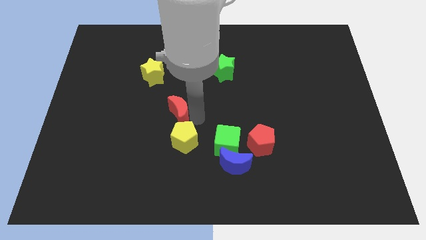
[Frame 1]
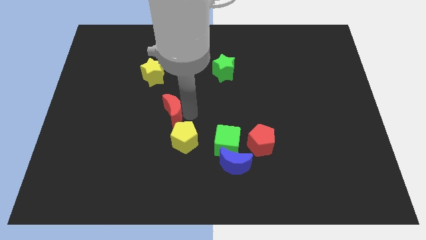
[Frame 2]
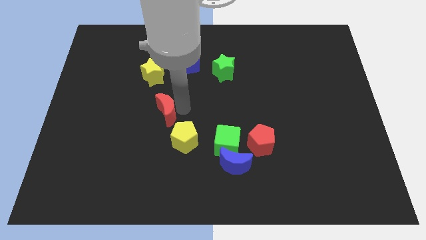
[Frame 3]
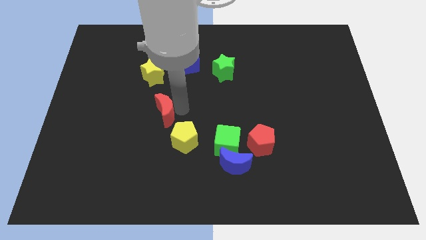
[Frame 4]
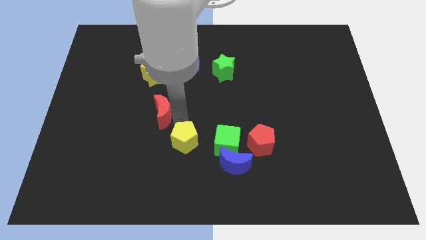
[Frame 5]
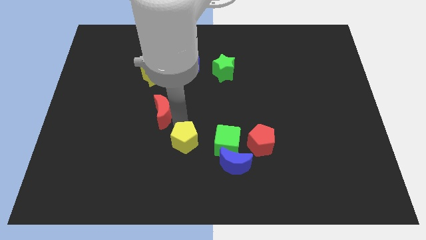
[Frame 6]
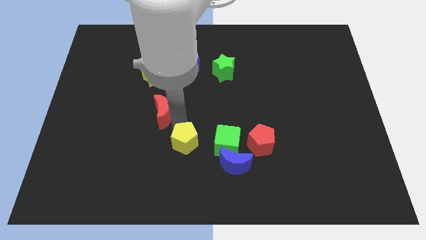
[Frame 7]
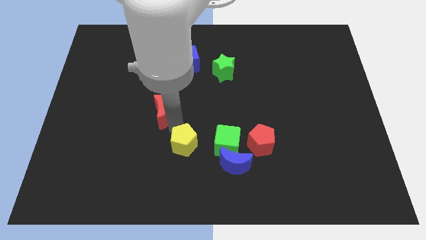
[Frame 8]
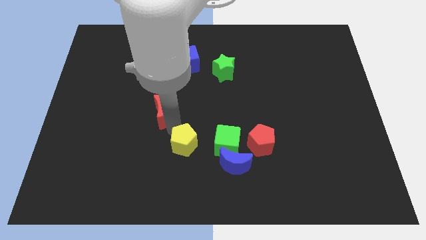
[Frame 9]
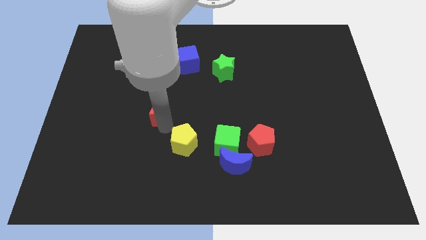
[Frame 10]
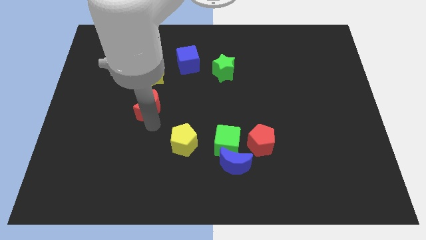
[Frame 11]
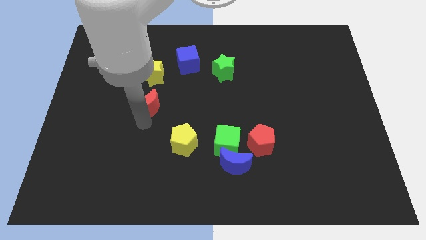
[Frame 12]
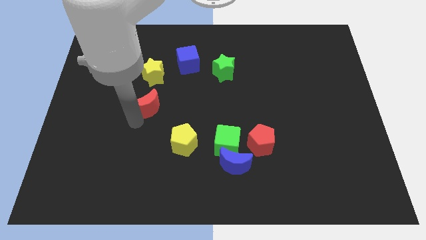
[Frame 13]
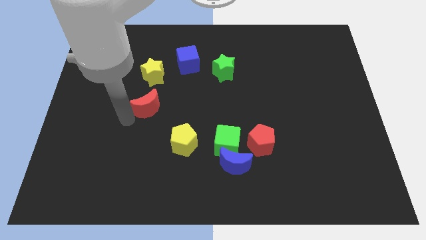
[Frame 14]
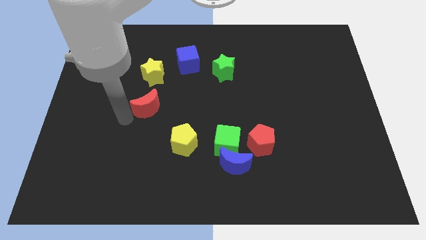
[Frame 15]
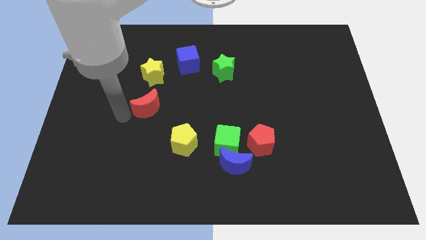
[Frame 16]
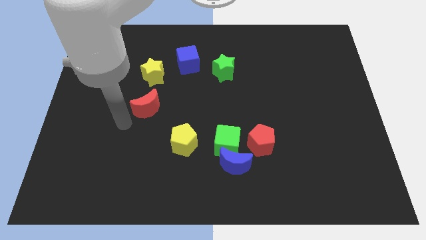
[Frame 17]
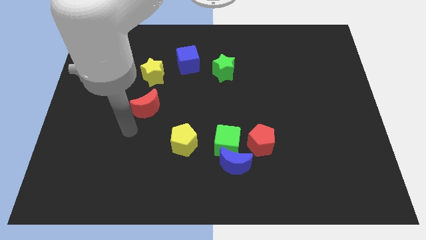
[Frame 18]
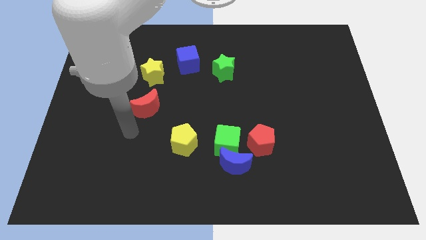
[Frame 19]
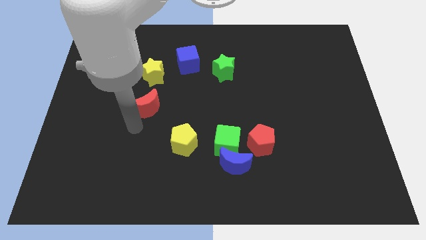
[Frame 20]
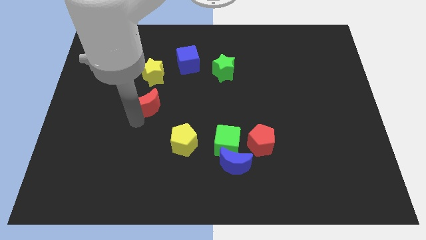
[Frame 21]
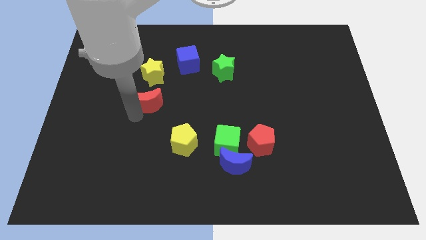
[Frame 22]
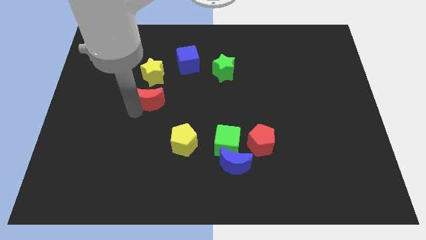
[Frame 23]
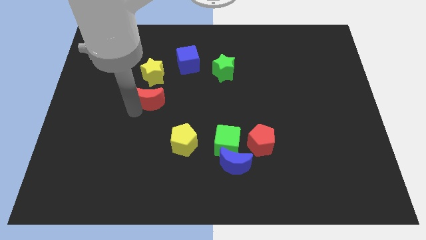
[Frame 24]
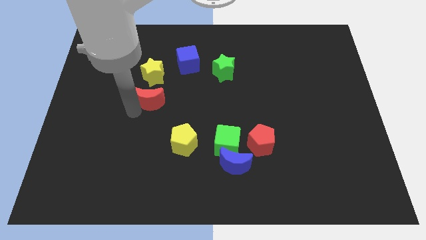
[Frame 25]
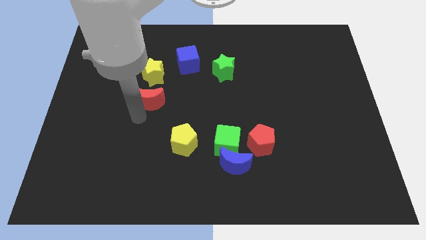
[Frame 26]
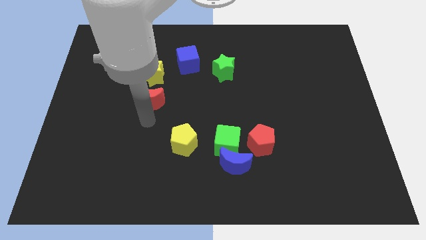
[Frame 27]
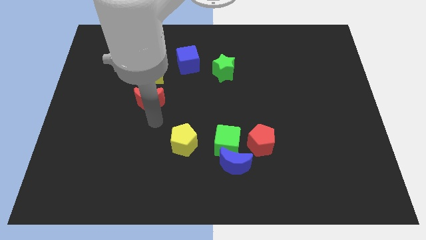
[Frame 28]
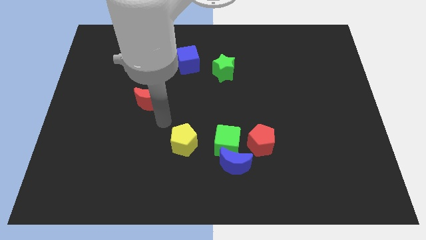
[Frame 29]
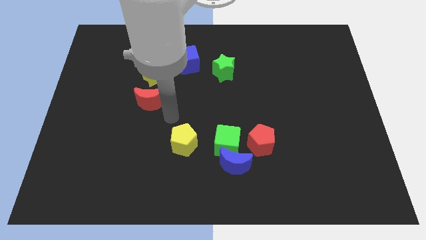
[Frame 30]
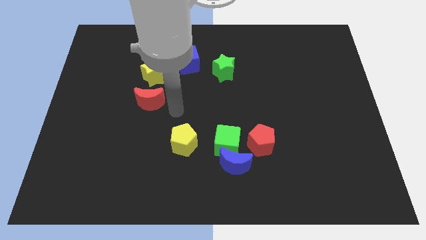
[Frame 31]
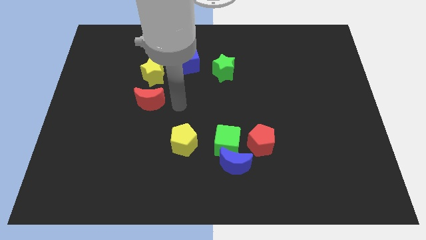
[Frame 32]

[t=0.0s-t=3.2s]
push red crescent below to the yellow star

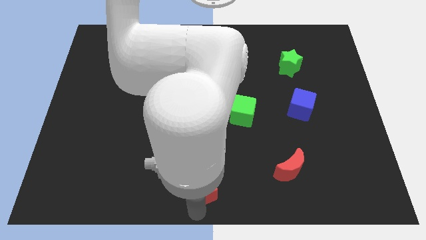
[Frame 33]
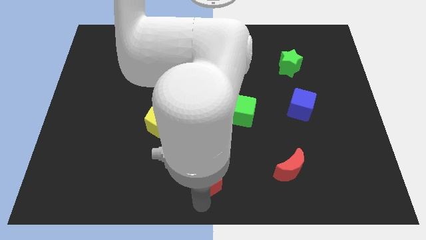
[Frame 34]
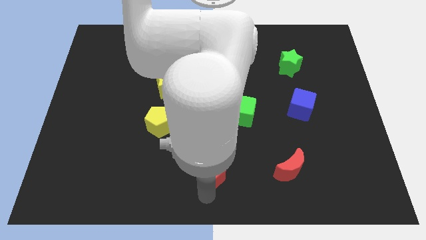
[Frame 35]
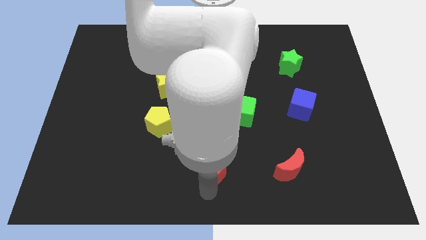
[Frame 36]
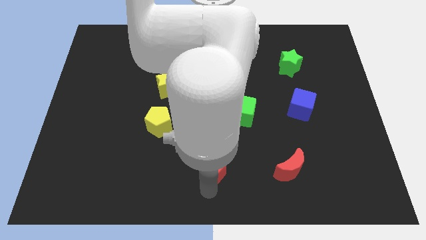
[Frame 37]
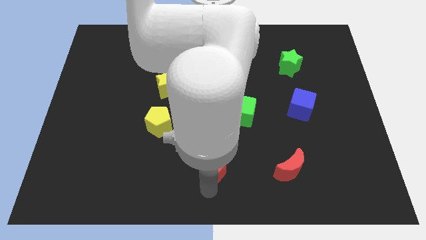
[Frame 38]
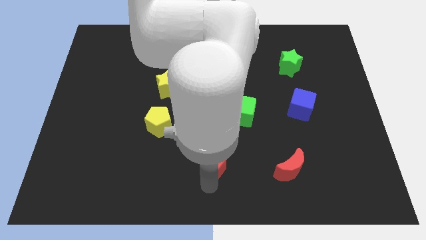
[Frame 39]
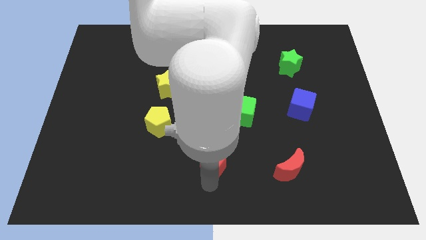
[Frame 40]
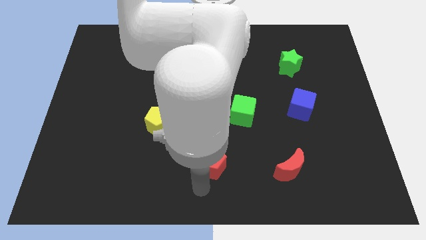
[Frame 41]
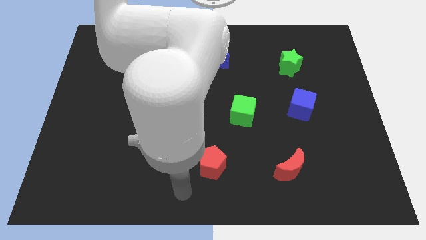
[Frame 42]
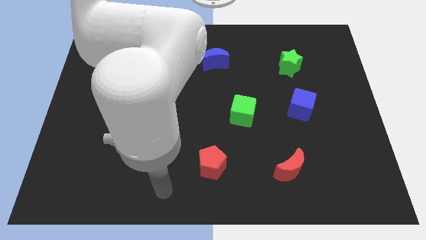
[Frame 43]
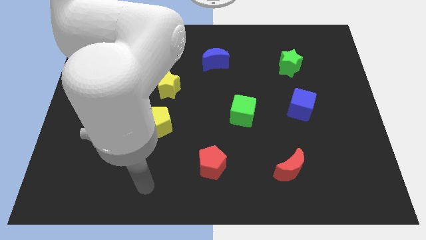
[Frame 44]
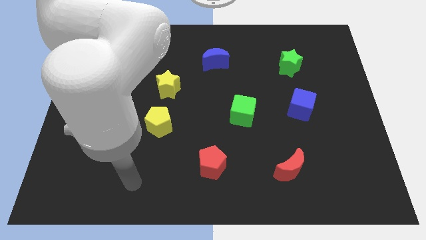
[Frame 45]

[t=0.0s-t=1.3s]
place red pentagon slightly upwards

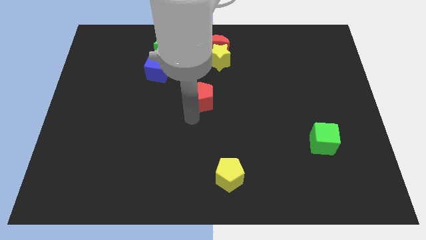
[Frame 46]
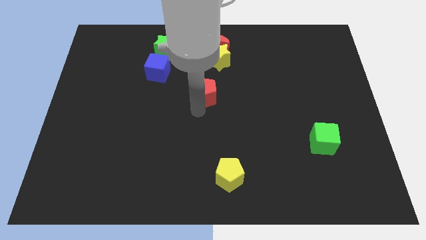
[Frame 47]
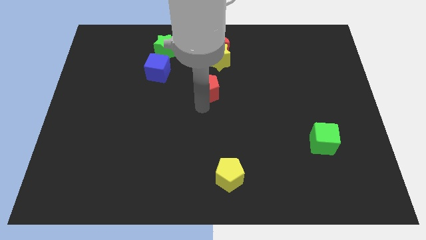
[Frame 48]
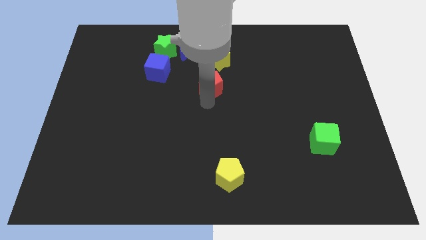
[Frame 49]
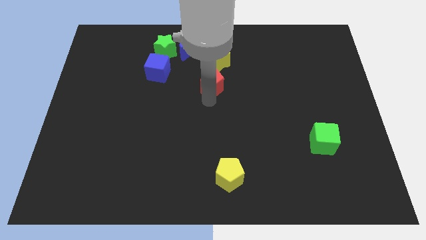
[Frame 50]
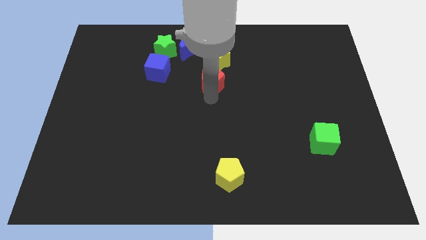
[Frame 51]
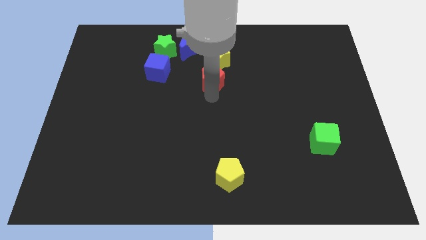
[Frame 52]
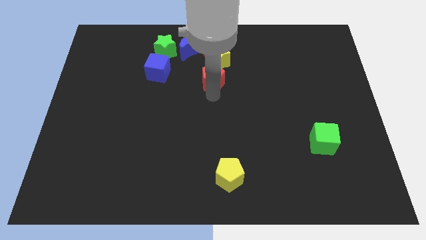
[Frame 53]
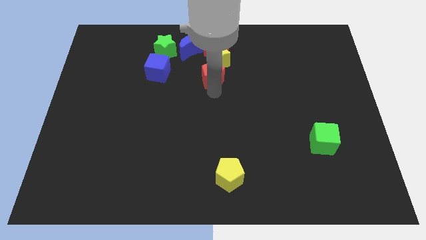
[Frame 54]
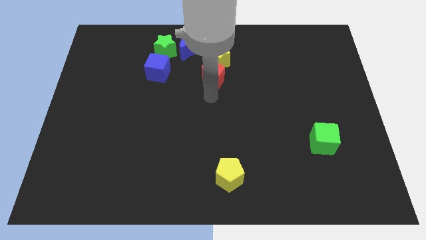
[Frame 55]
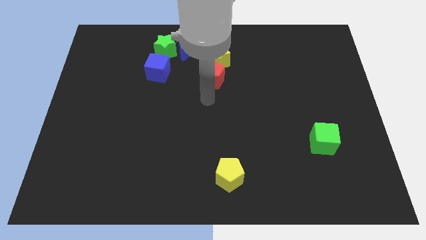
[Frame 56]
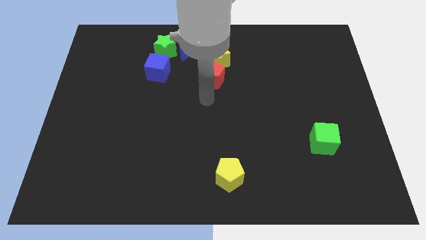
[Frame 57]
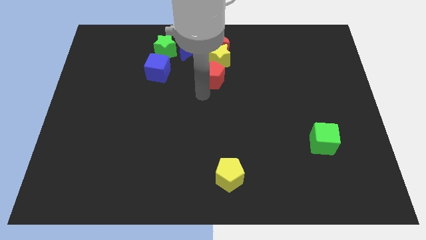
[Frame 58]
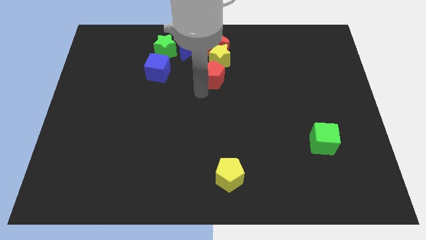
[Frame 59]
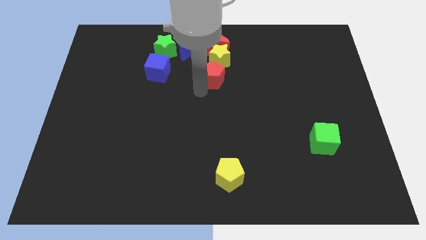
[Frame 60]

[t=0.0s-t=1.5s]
push the red pentagon slightly towards the yellow star

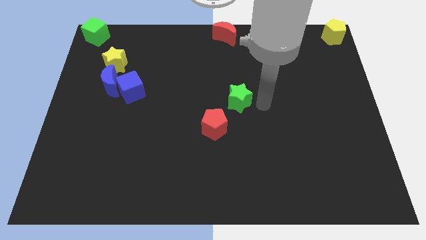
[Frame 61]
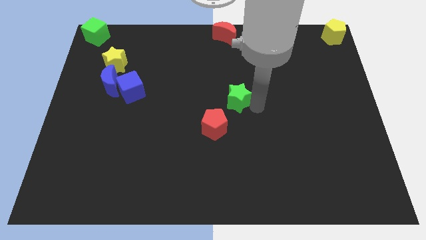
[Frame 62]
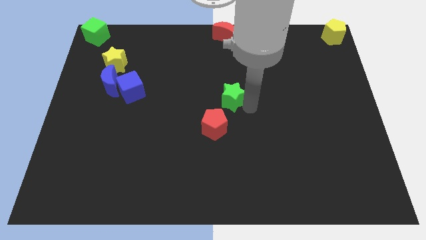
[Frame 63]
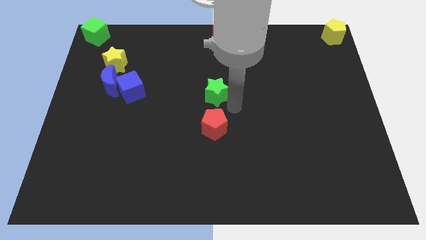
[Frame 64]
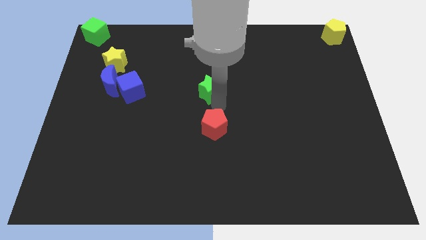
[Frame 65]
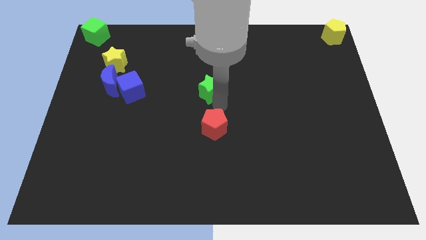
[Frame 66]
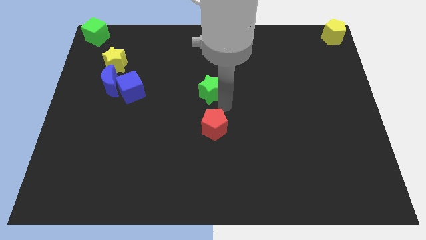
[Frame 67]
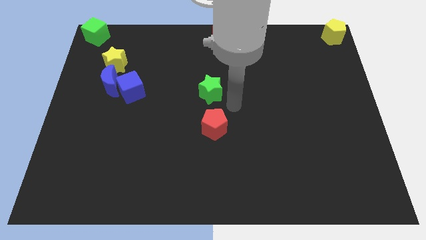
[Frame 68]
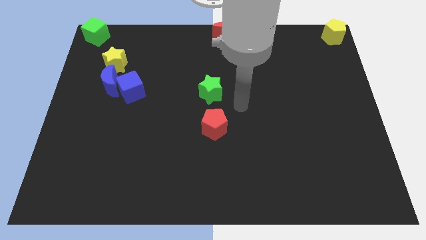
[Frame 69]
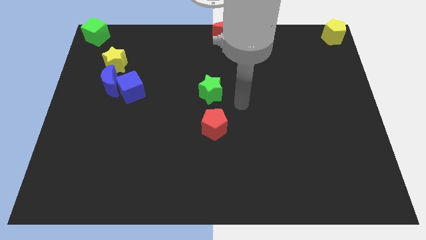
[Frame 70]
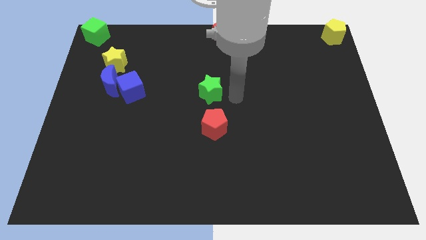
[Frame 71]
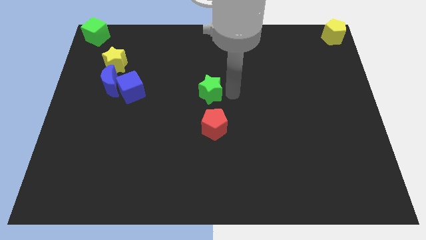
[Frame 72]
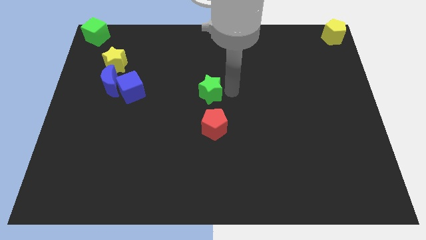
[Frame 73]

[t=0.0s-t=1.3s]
move the green star to the center of the board

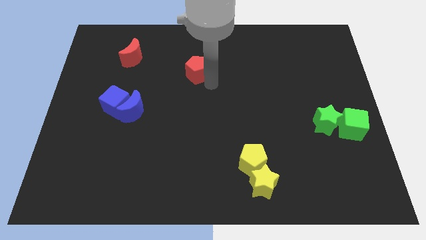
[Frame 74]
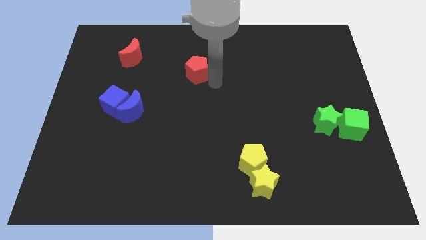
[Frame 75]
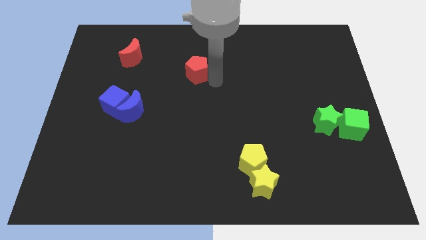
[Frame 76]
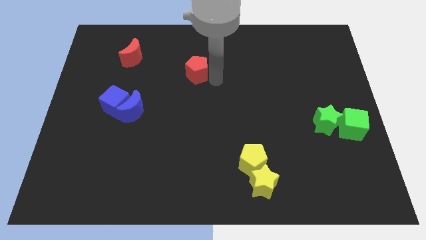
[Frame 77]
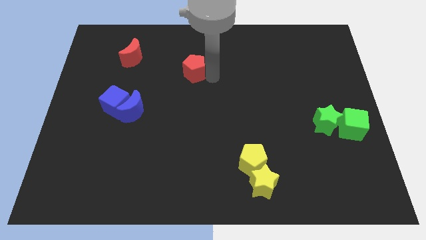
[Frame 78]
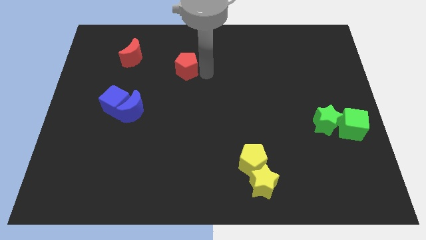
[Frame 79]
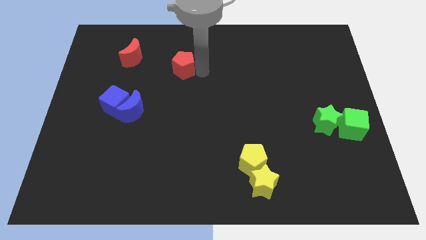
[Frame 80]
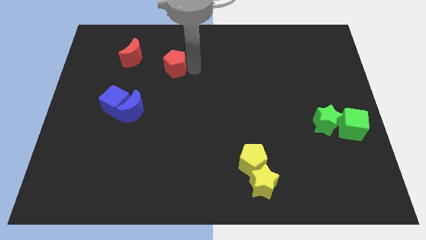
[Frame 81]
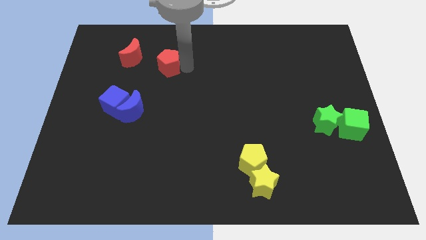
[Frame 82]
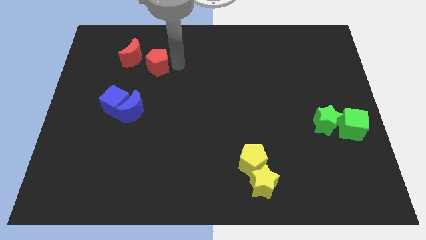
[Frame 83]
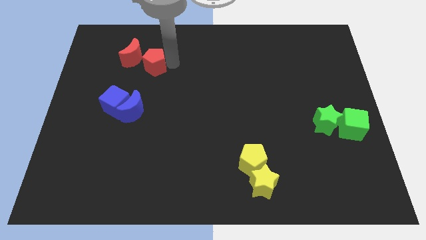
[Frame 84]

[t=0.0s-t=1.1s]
place the red pentagon above the blue moon

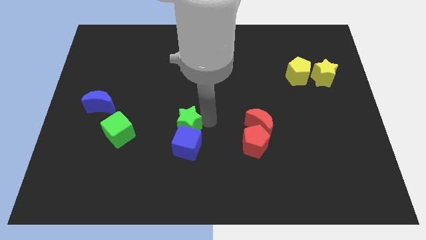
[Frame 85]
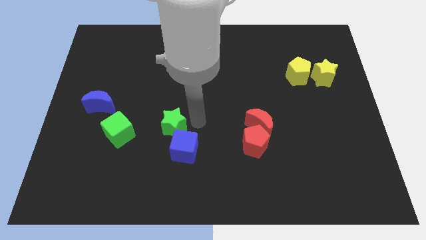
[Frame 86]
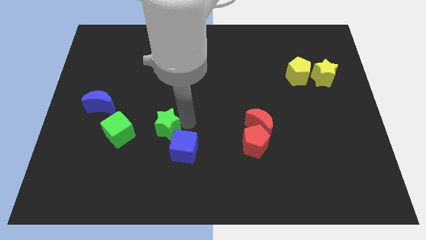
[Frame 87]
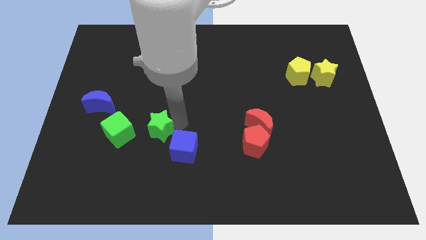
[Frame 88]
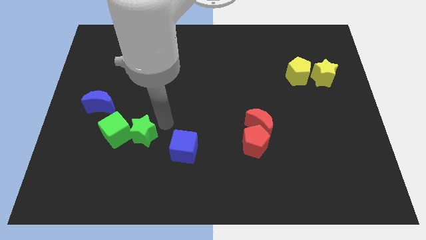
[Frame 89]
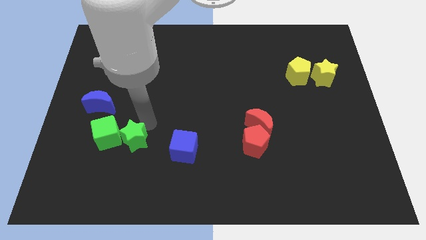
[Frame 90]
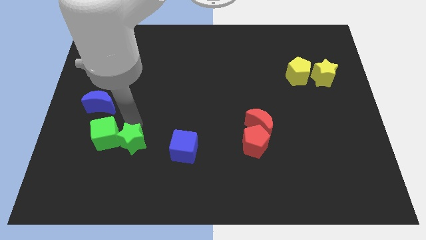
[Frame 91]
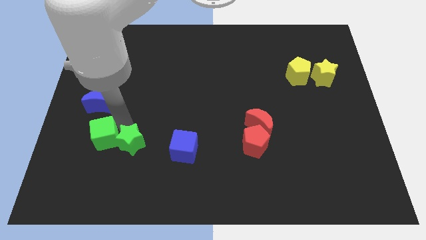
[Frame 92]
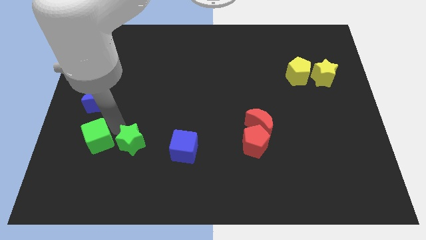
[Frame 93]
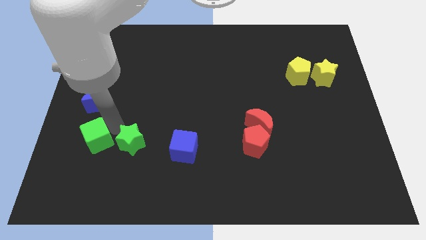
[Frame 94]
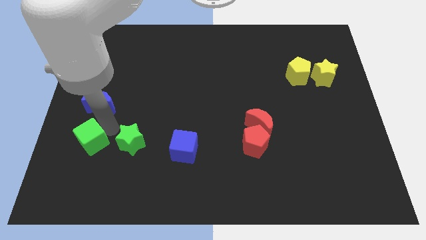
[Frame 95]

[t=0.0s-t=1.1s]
place the green cube to the bottom of blue crescent
